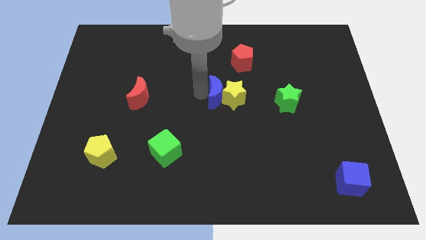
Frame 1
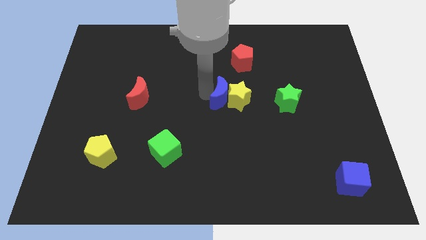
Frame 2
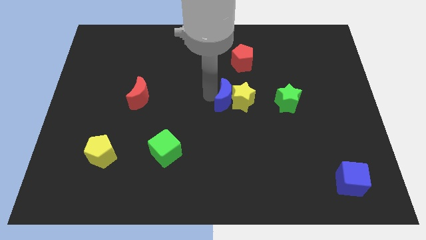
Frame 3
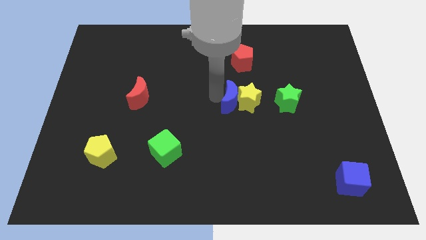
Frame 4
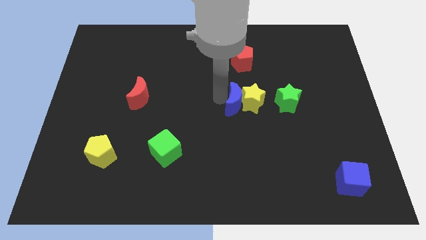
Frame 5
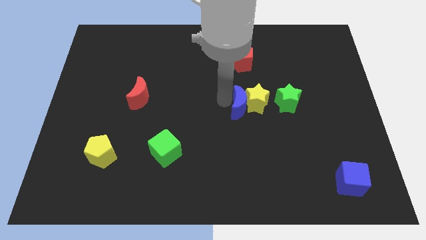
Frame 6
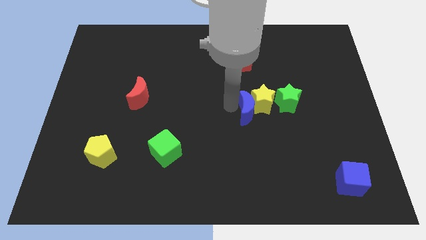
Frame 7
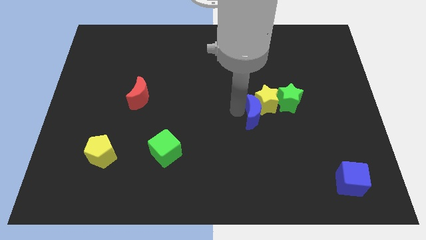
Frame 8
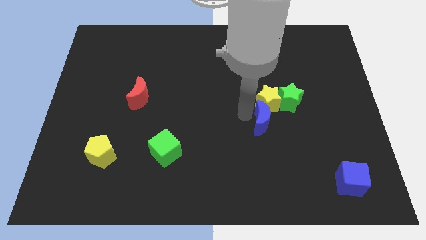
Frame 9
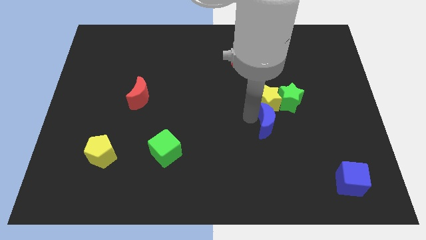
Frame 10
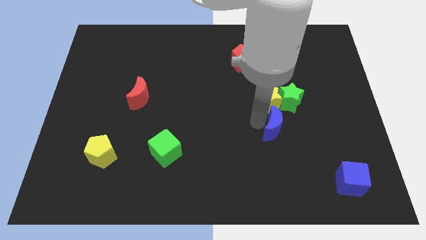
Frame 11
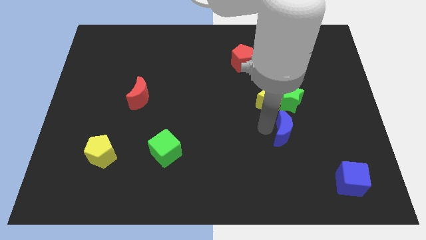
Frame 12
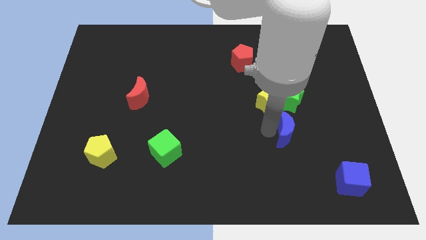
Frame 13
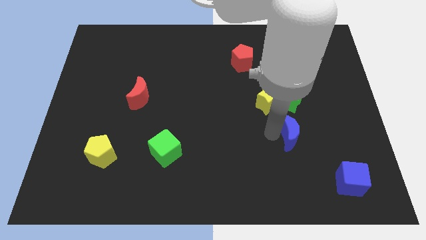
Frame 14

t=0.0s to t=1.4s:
place the blue crescent below the green star

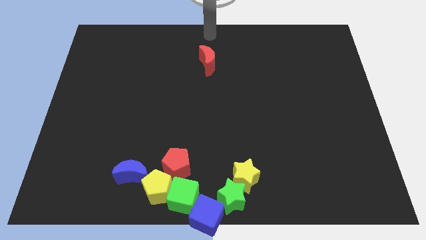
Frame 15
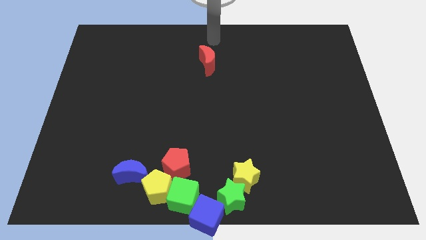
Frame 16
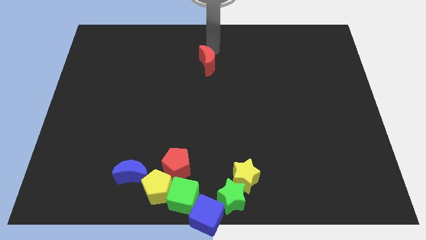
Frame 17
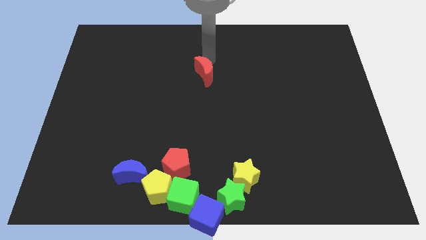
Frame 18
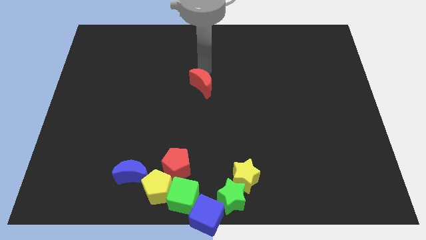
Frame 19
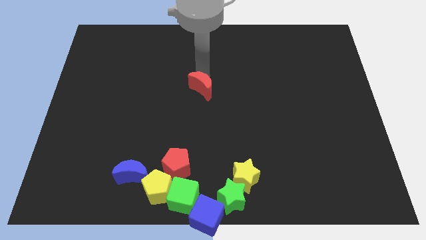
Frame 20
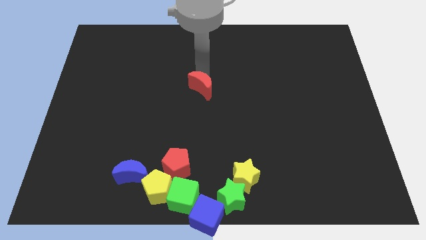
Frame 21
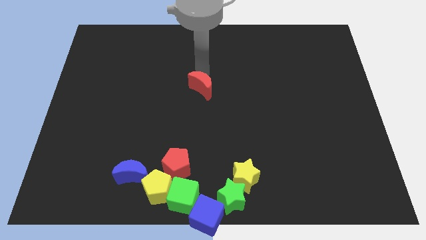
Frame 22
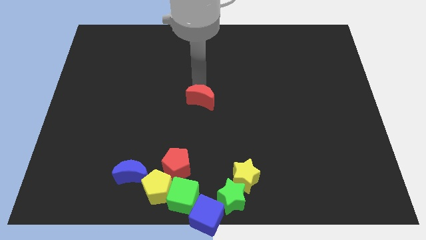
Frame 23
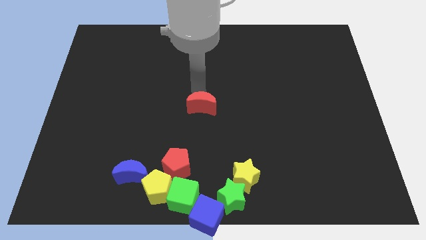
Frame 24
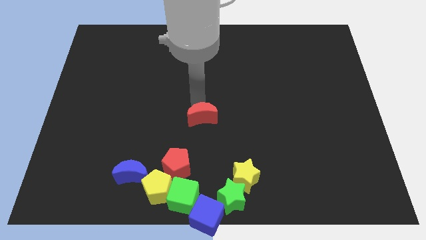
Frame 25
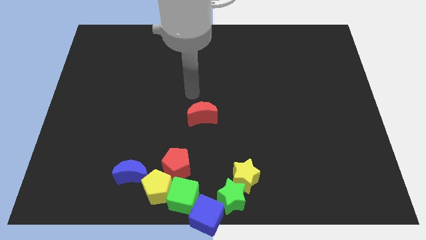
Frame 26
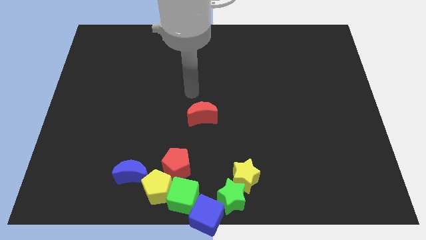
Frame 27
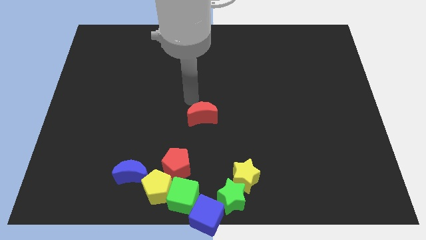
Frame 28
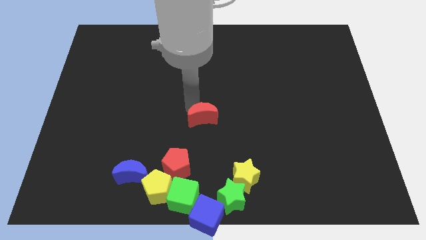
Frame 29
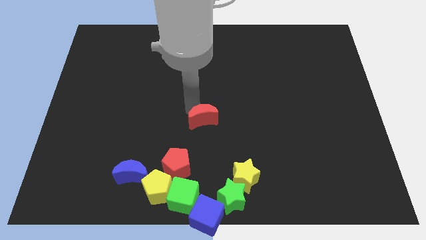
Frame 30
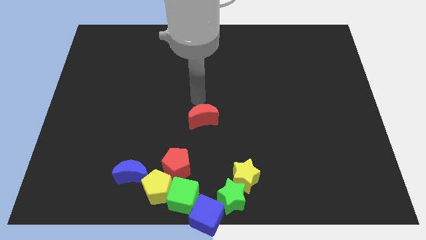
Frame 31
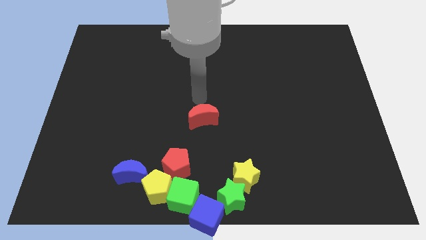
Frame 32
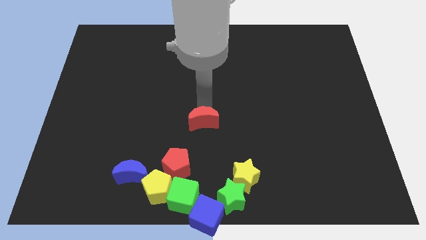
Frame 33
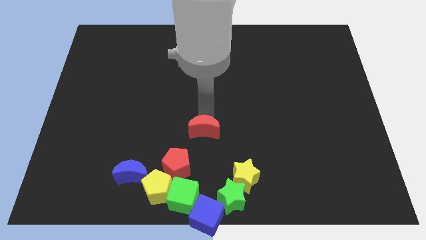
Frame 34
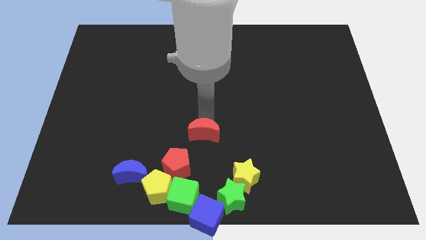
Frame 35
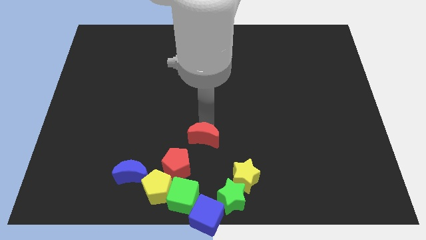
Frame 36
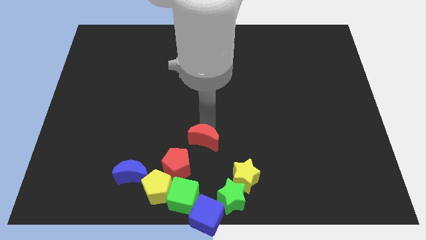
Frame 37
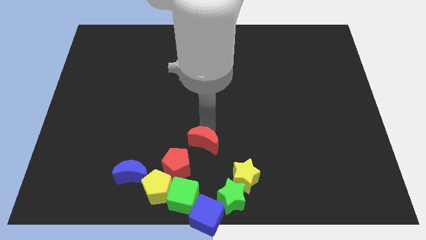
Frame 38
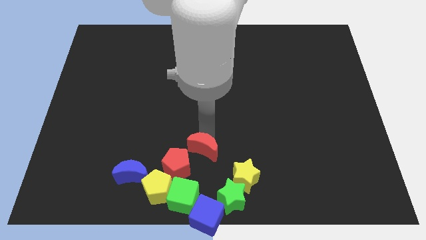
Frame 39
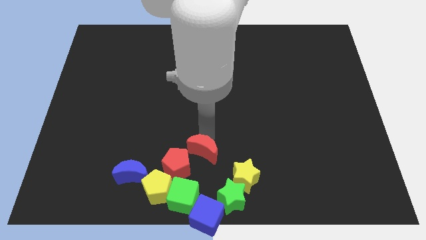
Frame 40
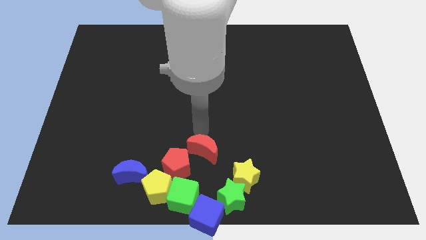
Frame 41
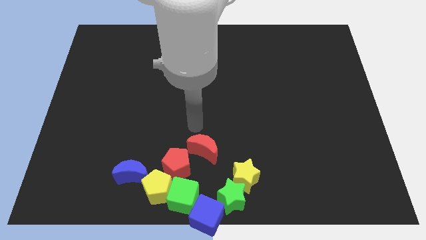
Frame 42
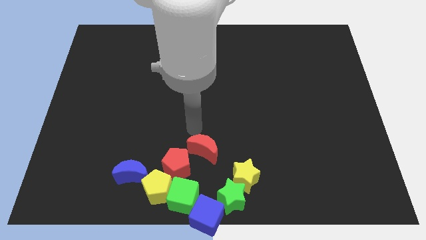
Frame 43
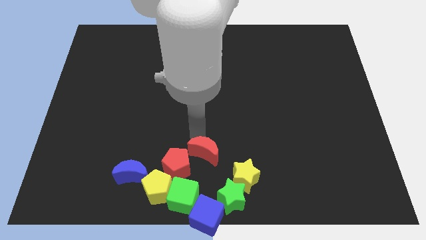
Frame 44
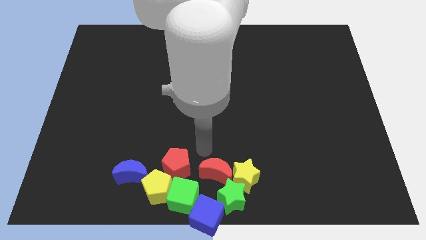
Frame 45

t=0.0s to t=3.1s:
move the red moon right to the red pentagon

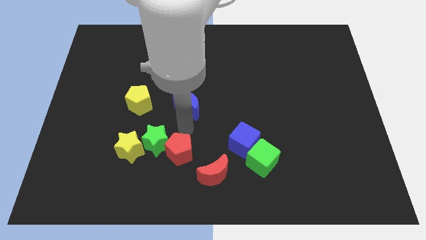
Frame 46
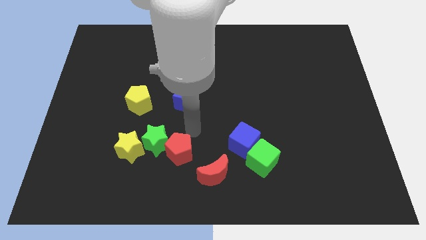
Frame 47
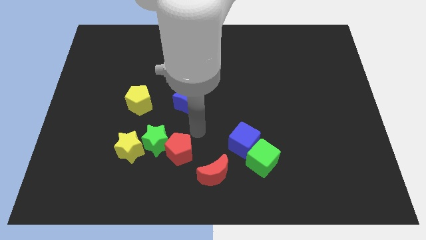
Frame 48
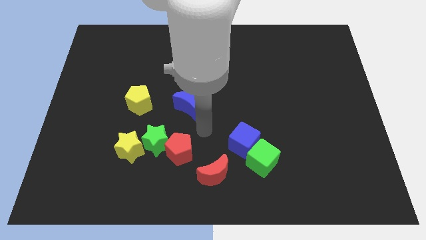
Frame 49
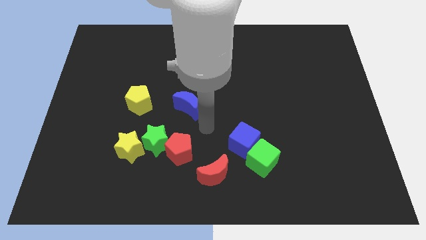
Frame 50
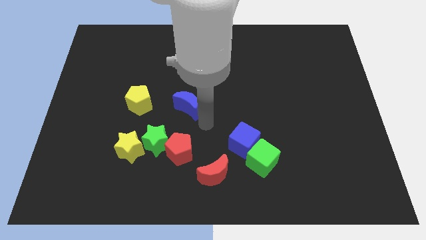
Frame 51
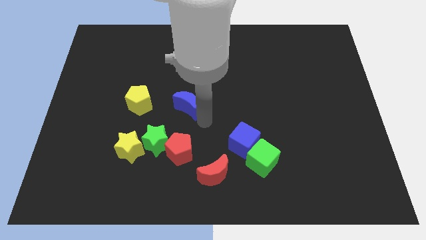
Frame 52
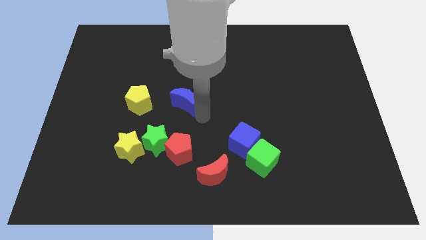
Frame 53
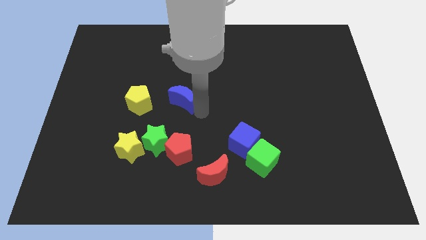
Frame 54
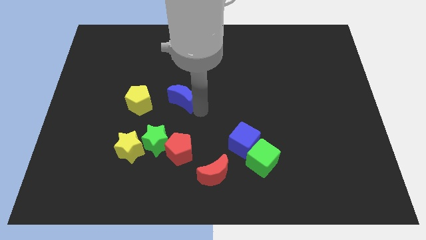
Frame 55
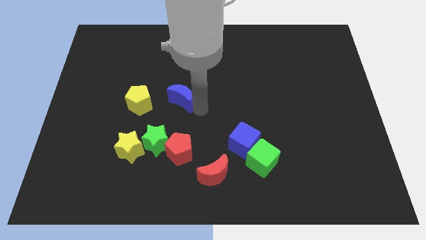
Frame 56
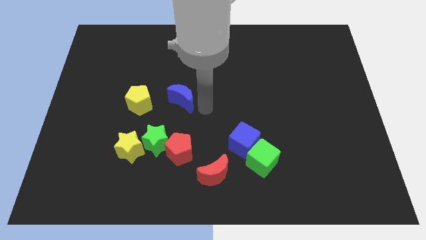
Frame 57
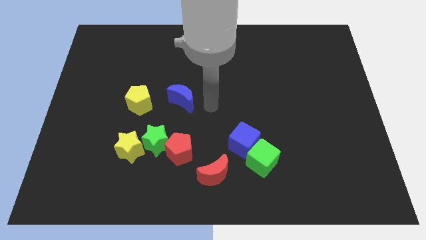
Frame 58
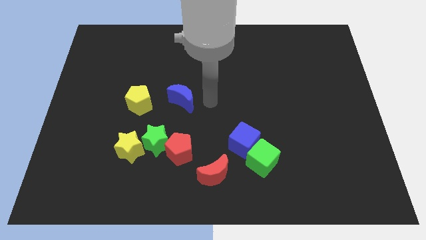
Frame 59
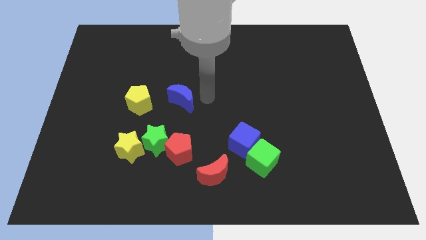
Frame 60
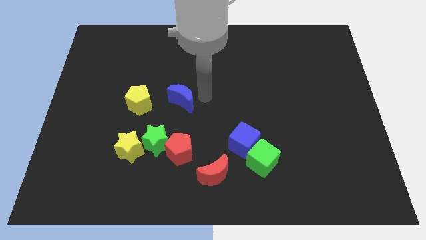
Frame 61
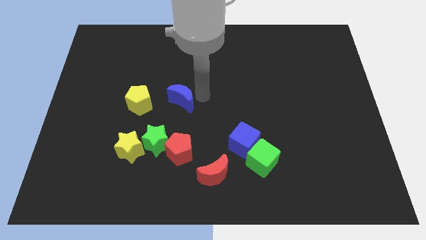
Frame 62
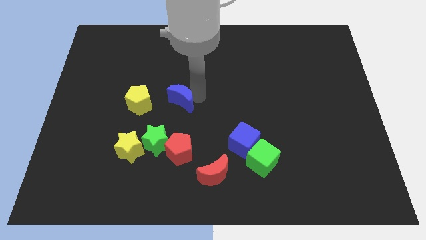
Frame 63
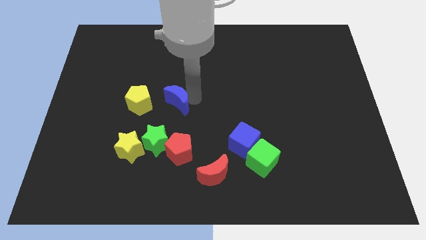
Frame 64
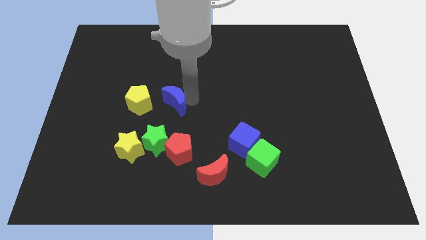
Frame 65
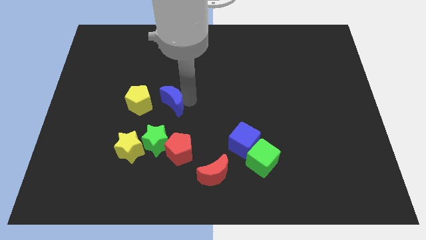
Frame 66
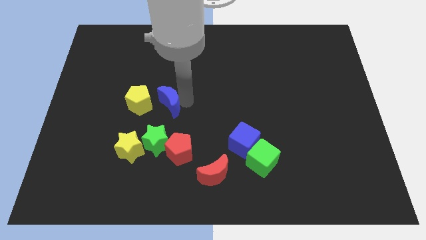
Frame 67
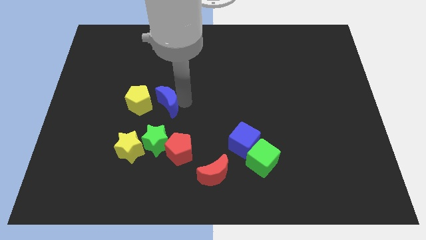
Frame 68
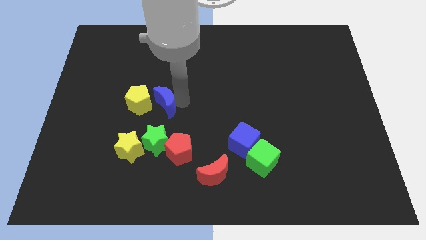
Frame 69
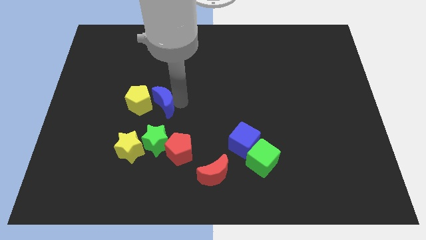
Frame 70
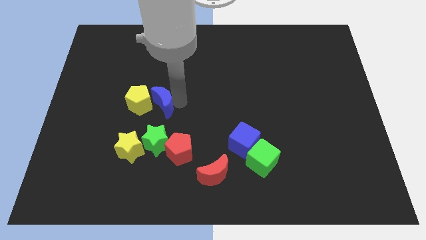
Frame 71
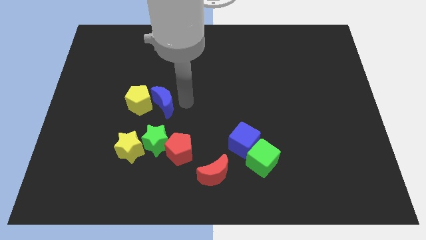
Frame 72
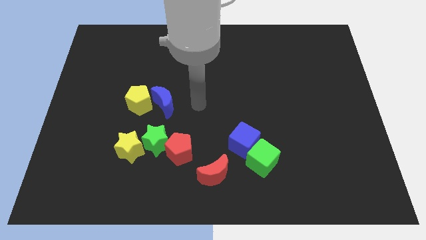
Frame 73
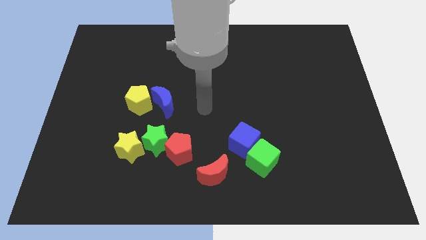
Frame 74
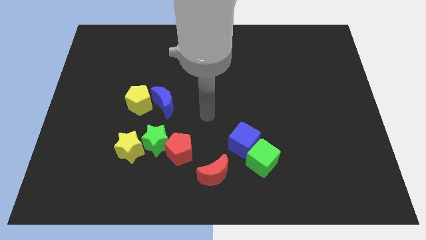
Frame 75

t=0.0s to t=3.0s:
push the blue moon to the right of yellow pentagon

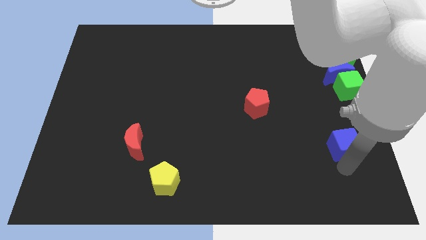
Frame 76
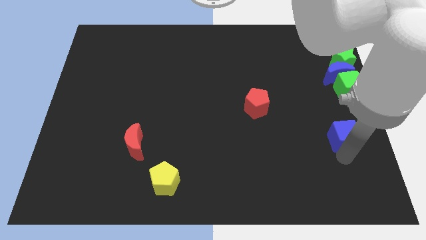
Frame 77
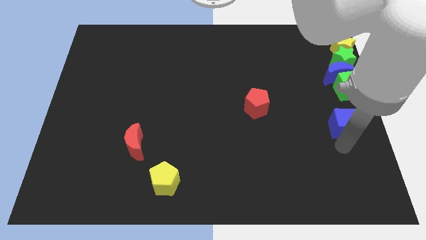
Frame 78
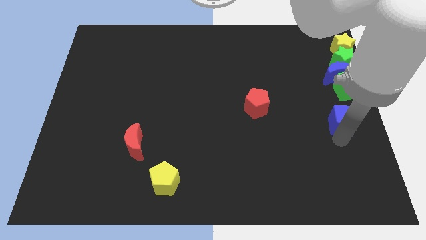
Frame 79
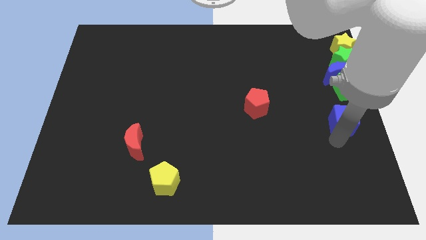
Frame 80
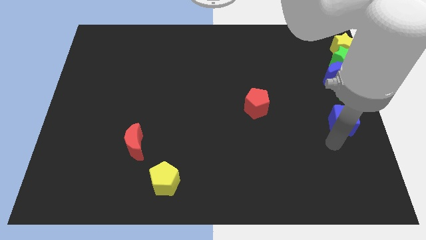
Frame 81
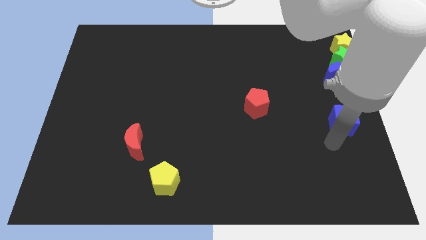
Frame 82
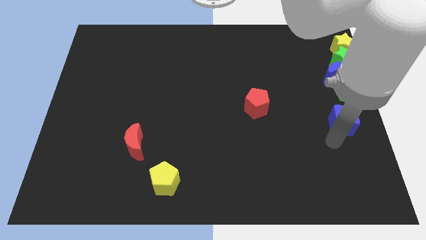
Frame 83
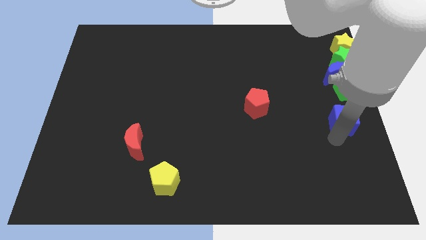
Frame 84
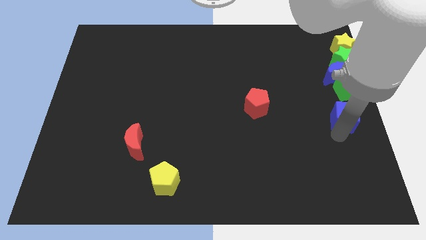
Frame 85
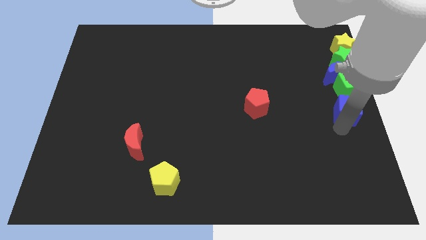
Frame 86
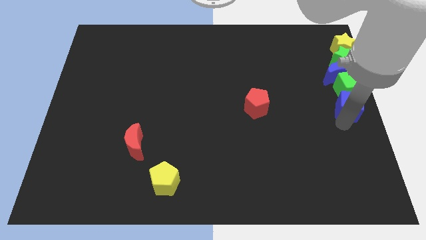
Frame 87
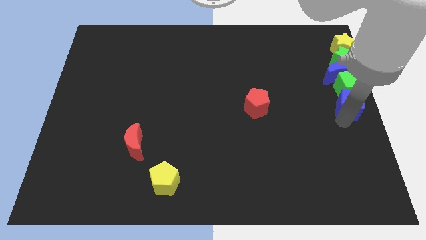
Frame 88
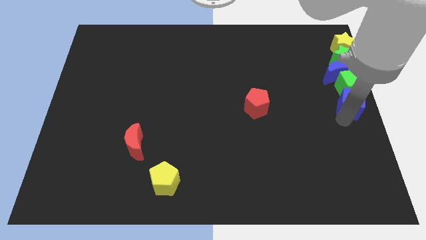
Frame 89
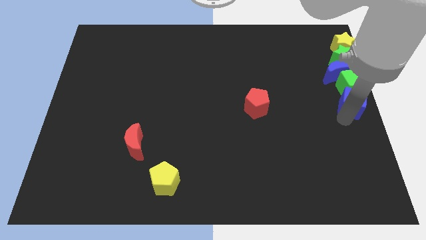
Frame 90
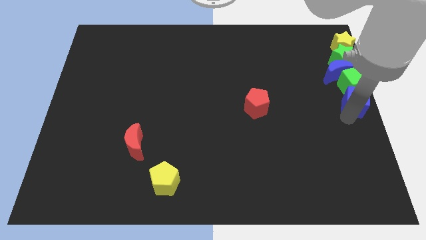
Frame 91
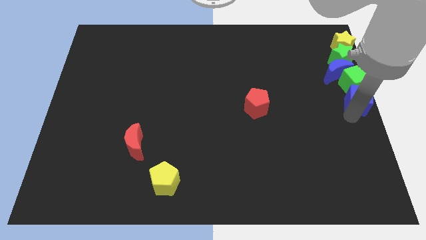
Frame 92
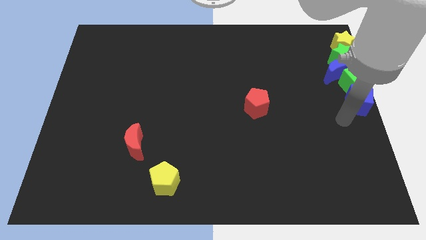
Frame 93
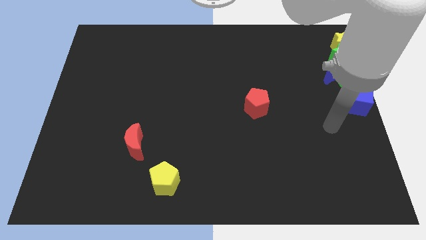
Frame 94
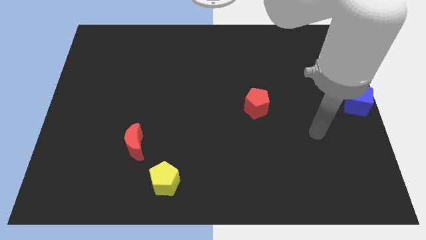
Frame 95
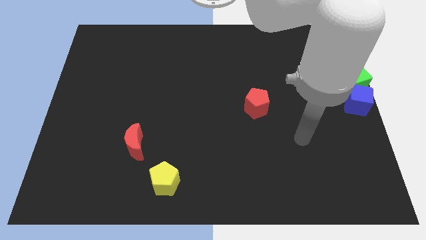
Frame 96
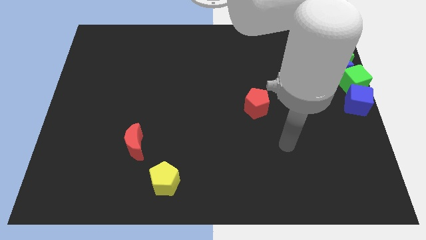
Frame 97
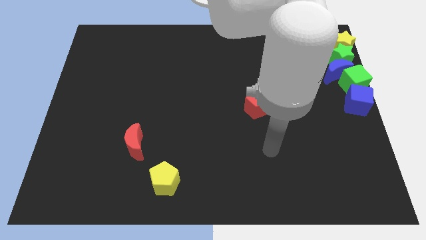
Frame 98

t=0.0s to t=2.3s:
place the blue cube below the green cube
